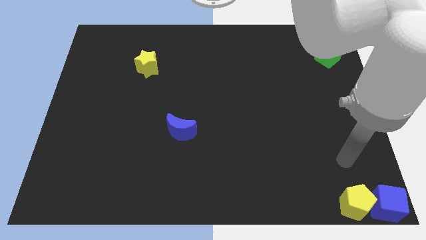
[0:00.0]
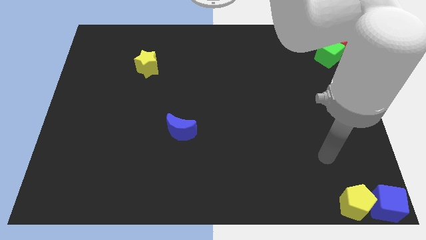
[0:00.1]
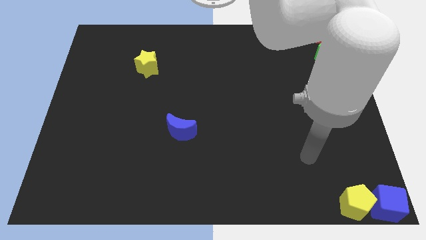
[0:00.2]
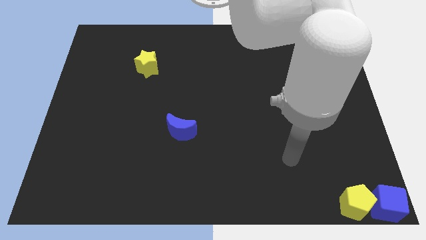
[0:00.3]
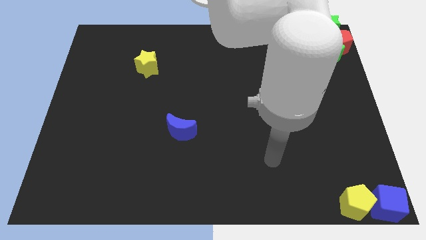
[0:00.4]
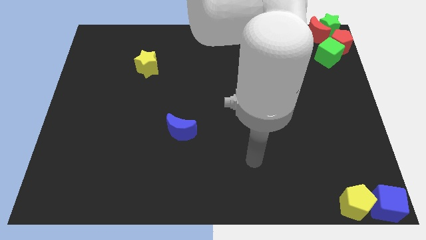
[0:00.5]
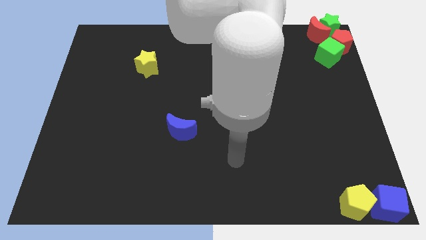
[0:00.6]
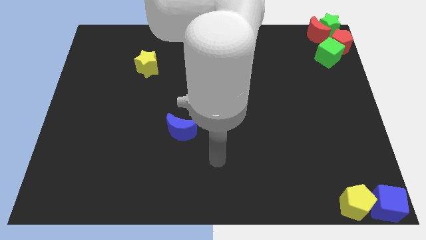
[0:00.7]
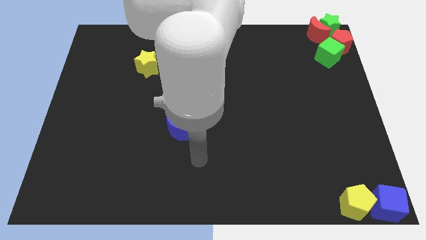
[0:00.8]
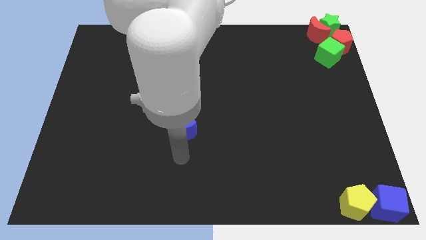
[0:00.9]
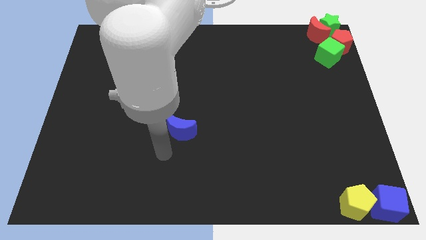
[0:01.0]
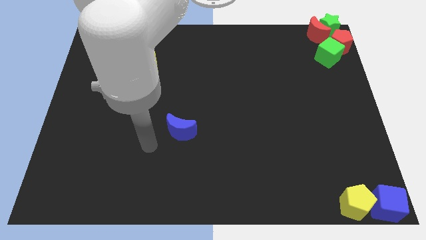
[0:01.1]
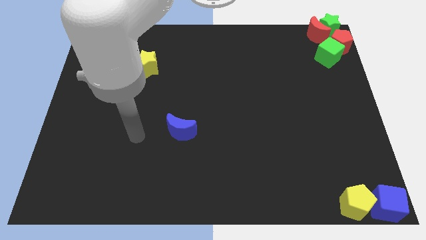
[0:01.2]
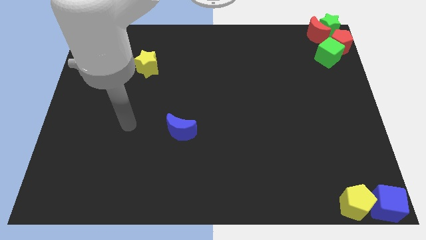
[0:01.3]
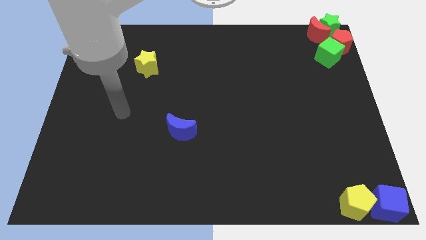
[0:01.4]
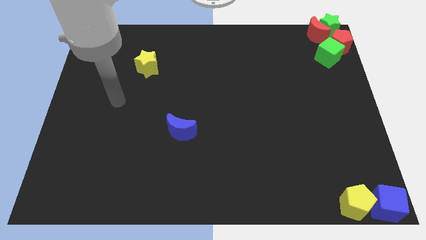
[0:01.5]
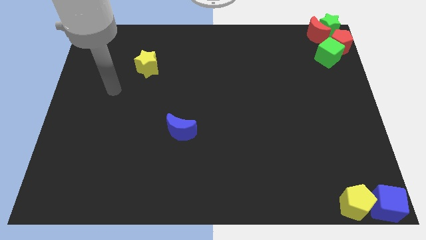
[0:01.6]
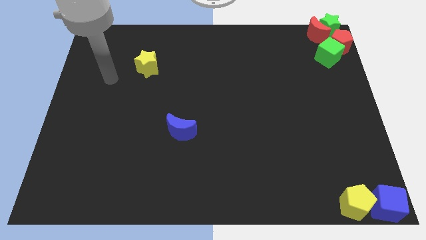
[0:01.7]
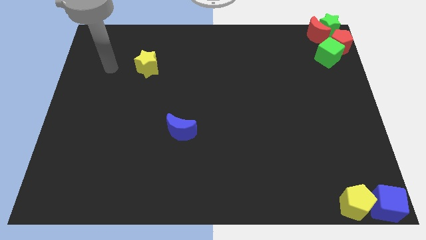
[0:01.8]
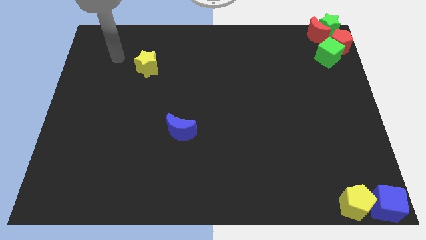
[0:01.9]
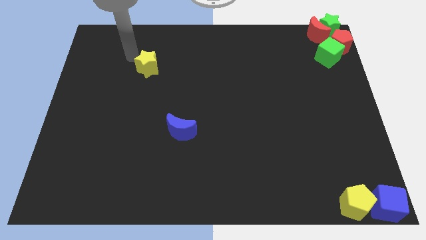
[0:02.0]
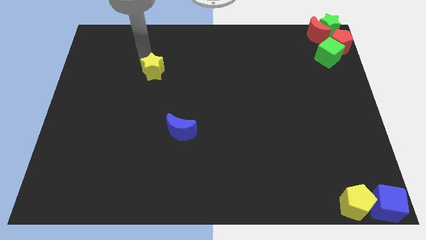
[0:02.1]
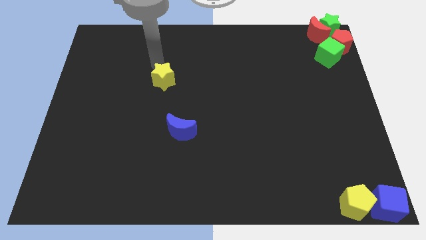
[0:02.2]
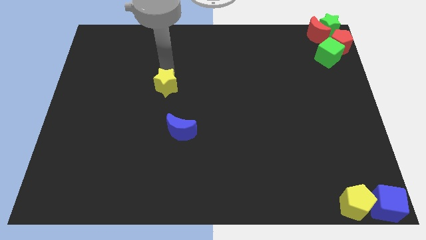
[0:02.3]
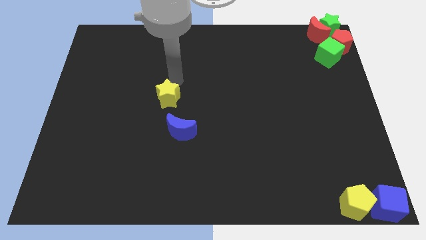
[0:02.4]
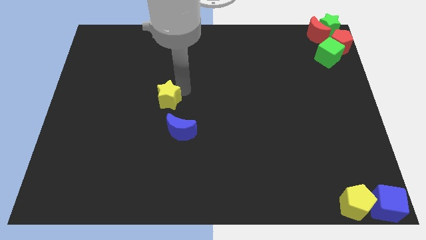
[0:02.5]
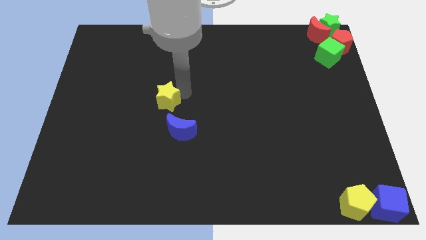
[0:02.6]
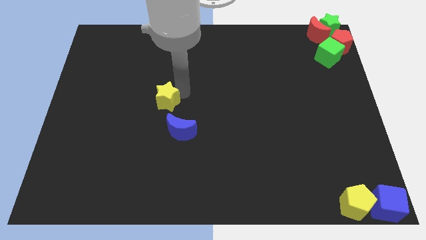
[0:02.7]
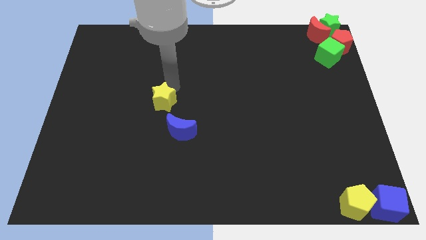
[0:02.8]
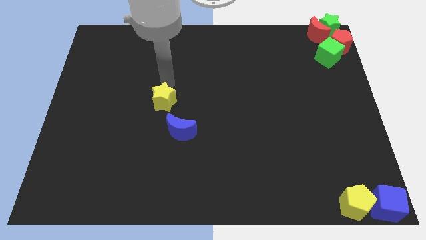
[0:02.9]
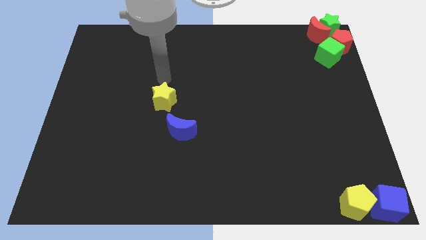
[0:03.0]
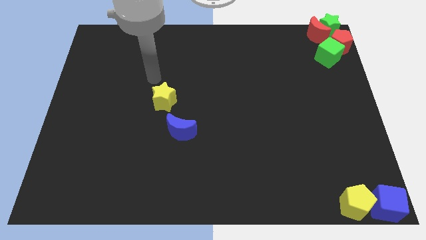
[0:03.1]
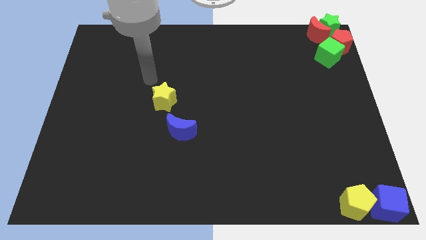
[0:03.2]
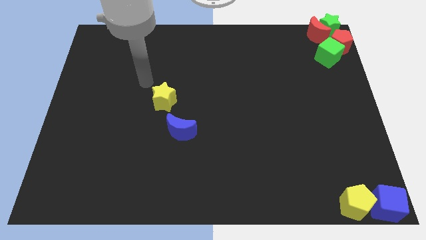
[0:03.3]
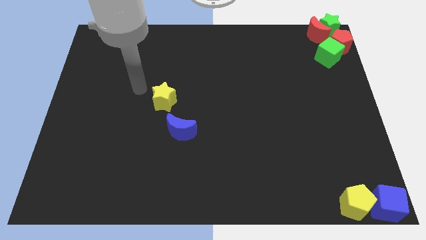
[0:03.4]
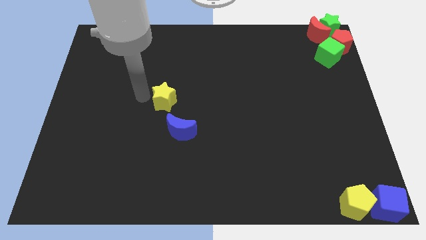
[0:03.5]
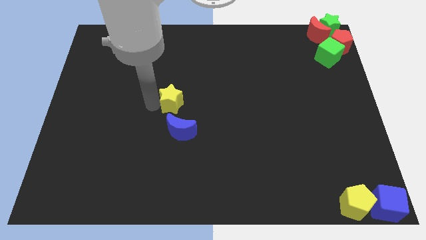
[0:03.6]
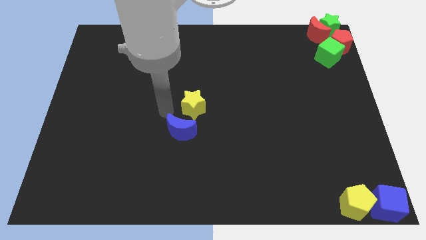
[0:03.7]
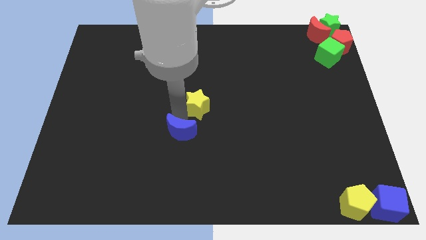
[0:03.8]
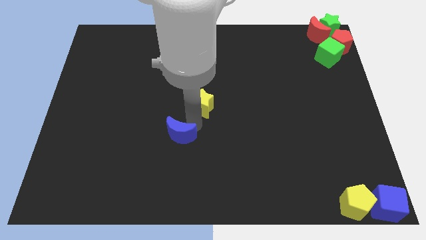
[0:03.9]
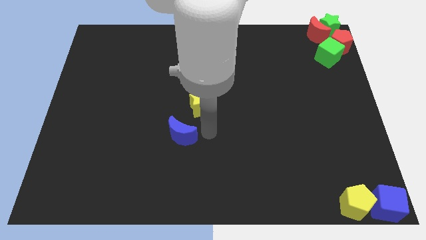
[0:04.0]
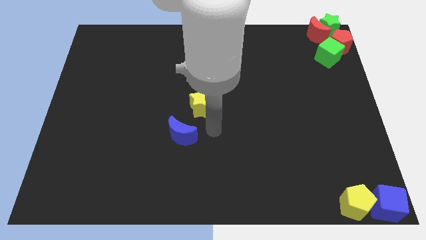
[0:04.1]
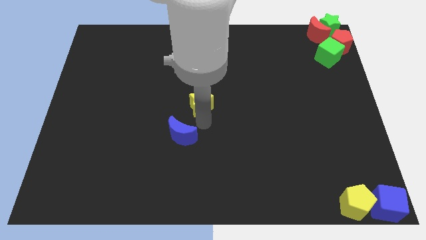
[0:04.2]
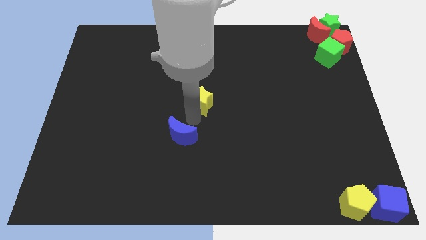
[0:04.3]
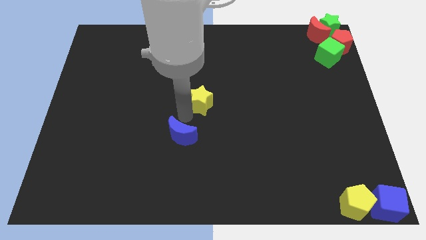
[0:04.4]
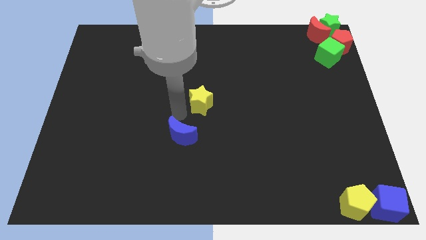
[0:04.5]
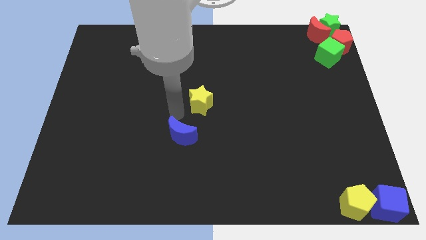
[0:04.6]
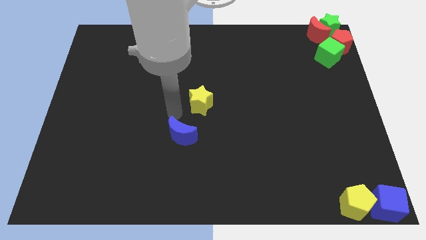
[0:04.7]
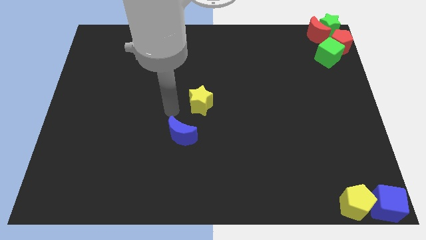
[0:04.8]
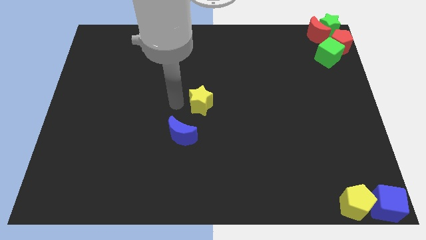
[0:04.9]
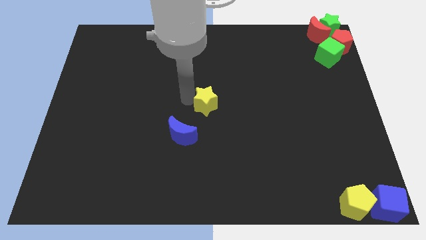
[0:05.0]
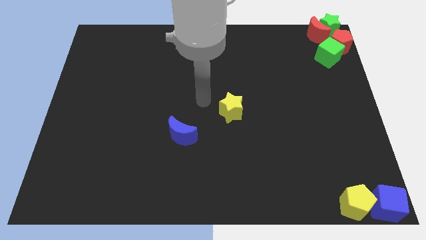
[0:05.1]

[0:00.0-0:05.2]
place the yellow star at the center

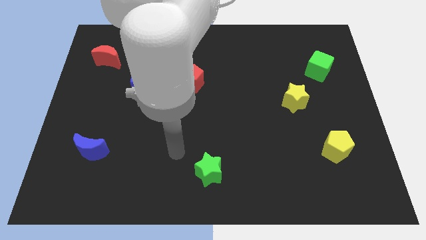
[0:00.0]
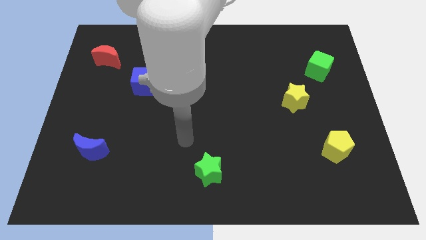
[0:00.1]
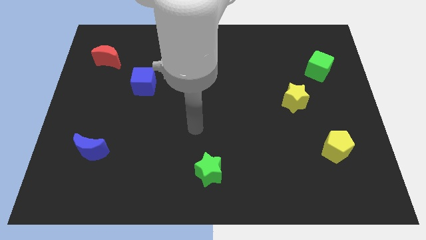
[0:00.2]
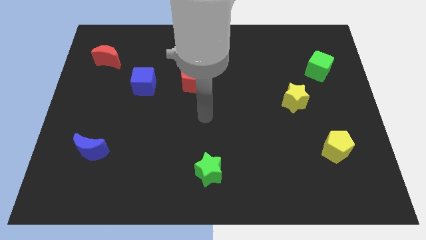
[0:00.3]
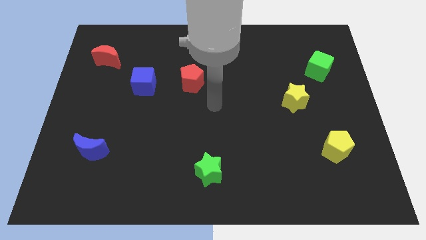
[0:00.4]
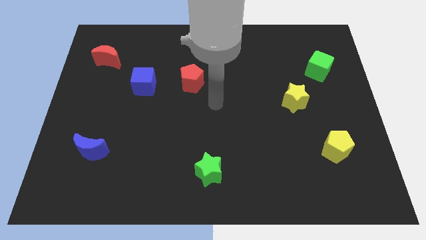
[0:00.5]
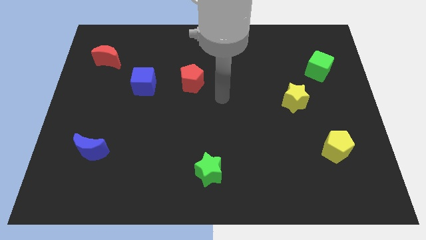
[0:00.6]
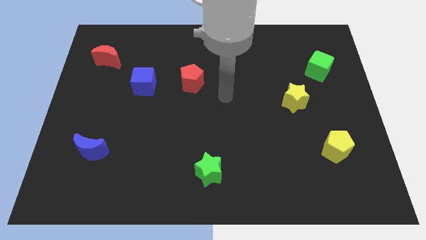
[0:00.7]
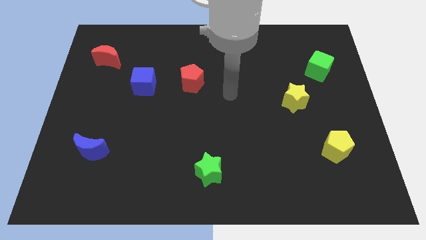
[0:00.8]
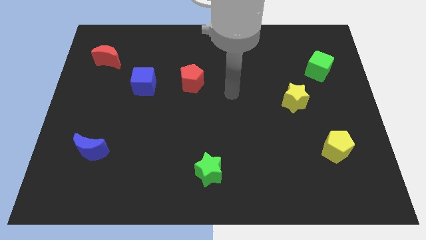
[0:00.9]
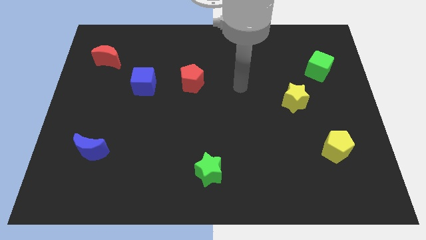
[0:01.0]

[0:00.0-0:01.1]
place arm in between red pentagon and yellow star

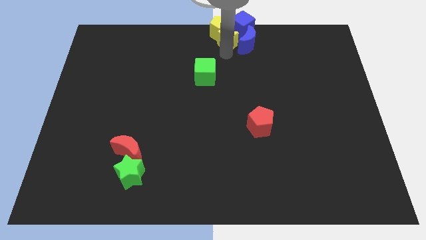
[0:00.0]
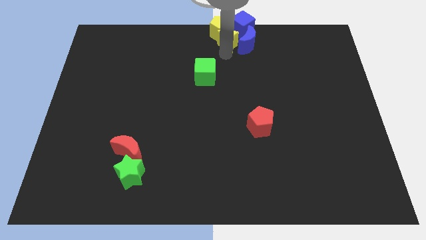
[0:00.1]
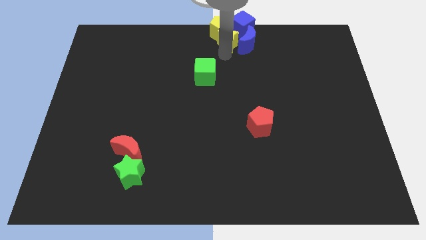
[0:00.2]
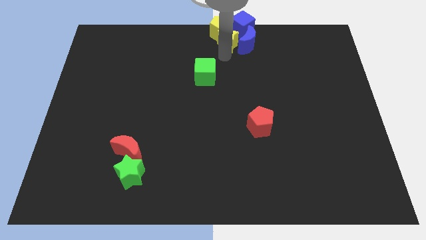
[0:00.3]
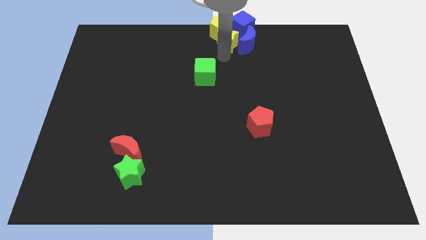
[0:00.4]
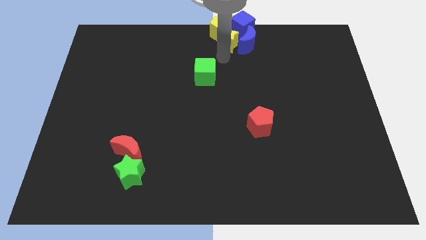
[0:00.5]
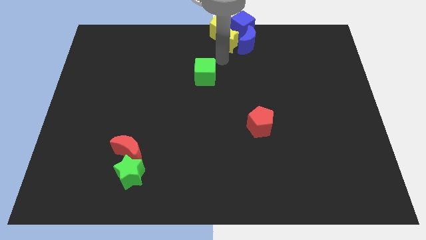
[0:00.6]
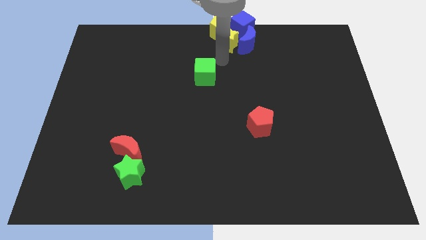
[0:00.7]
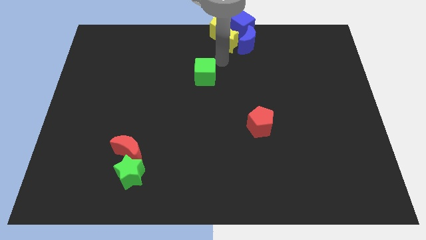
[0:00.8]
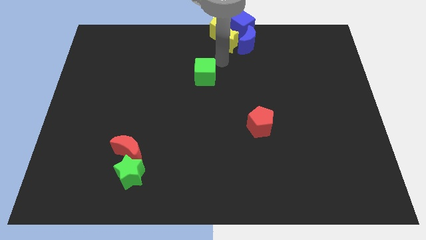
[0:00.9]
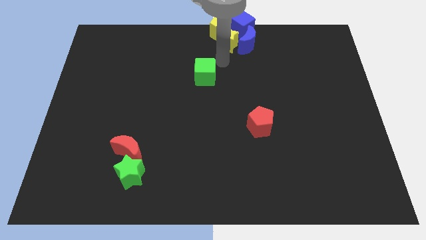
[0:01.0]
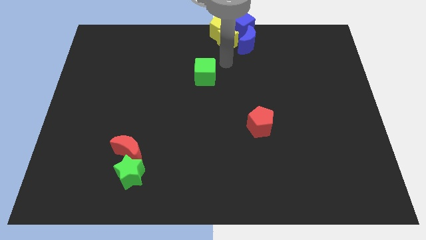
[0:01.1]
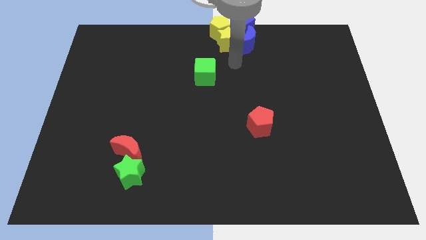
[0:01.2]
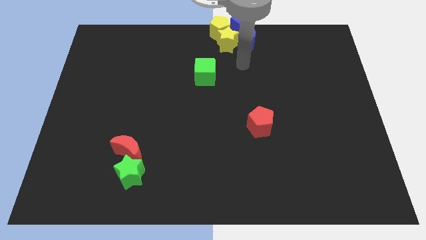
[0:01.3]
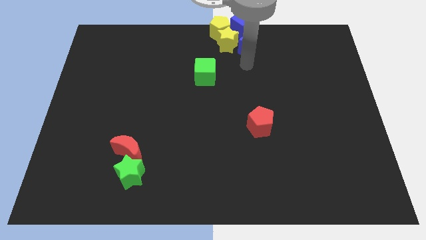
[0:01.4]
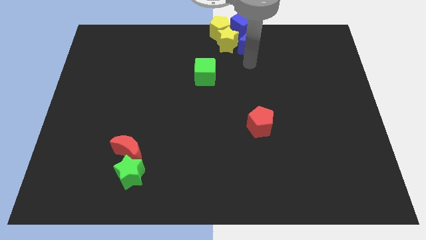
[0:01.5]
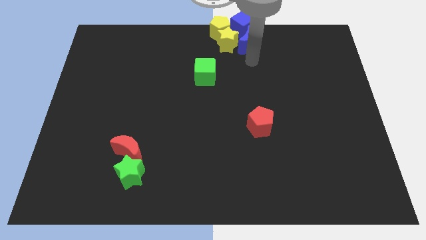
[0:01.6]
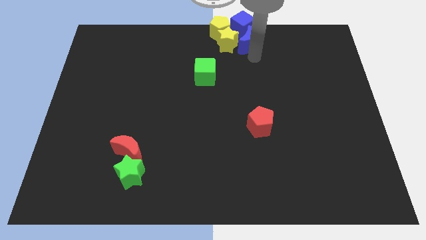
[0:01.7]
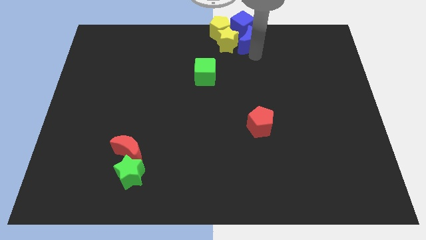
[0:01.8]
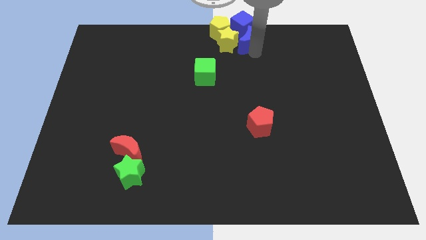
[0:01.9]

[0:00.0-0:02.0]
move the arm towards the blue crescent

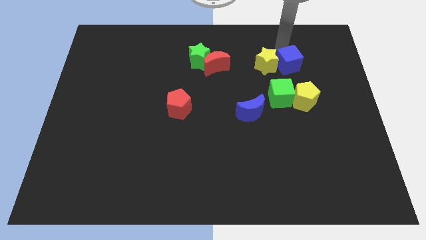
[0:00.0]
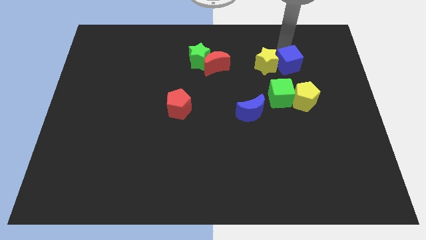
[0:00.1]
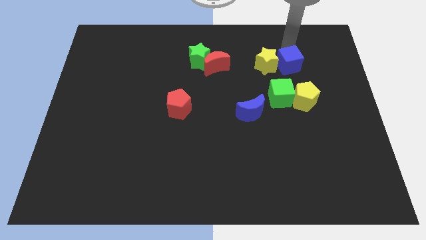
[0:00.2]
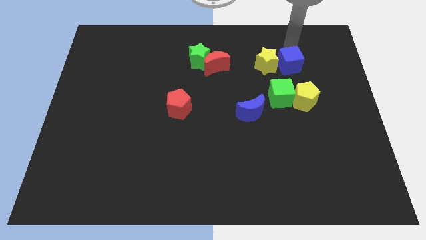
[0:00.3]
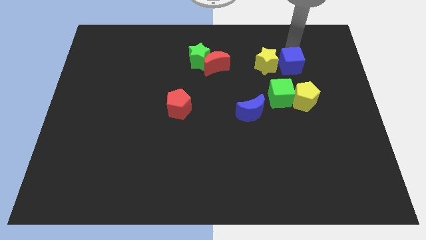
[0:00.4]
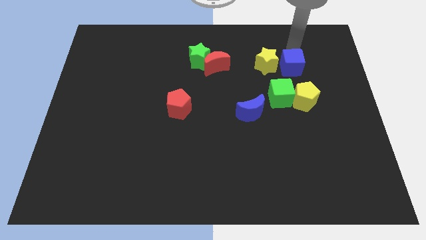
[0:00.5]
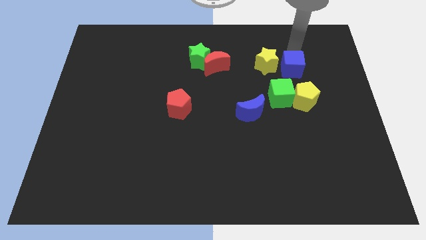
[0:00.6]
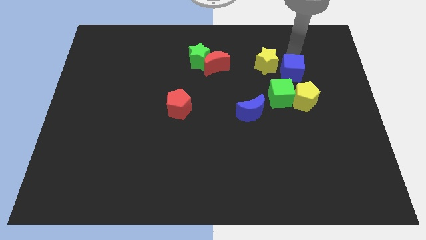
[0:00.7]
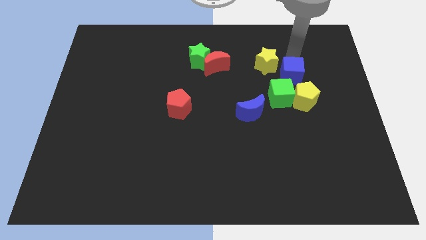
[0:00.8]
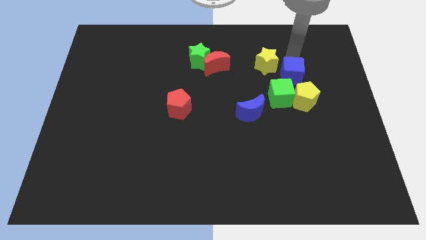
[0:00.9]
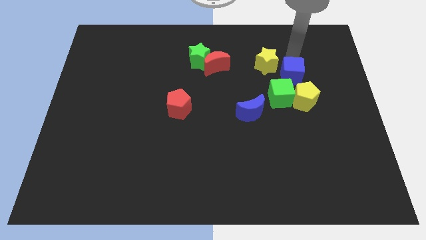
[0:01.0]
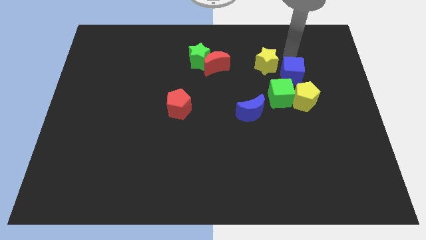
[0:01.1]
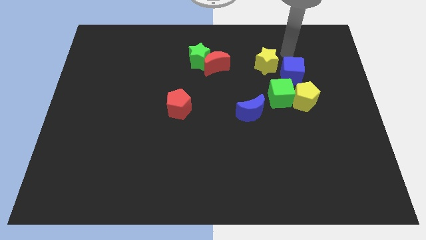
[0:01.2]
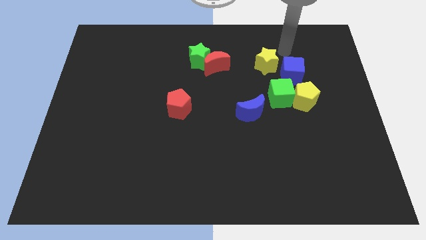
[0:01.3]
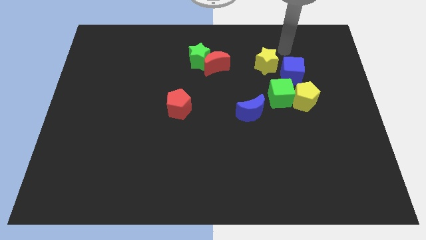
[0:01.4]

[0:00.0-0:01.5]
place blue cube to the bottom right of yellow star
